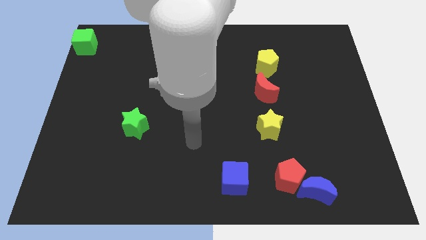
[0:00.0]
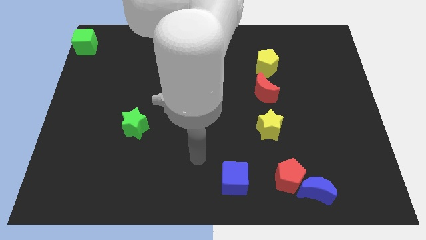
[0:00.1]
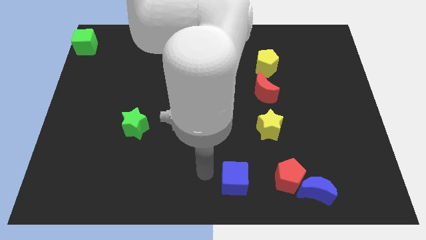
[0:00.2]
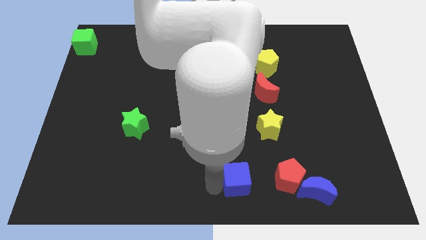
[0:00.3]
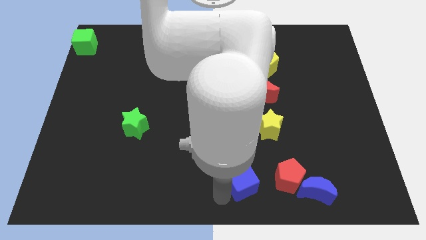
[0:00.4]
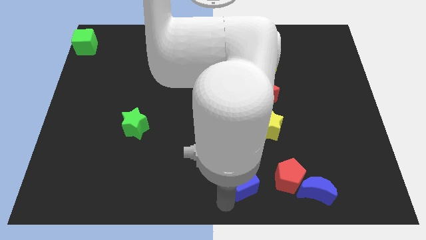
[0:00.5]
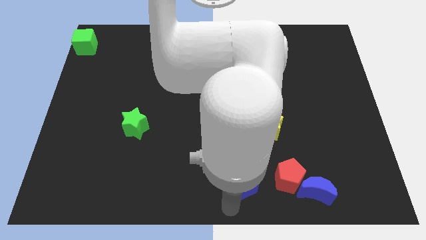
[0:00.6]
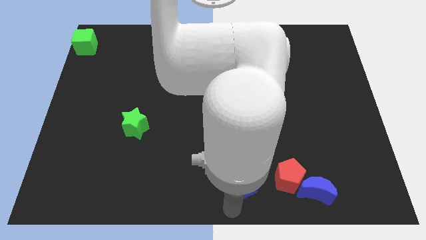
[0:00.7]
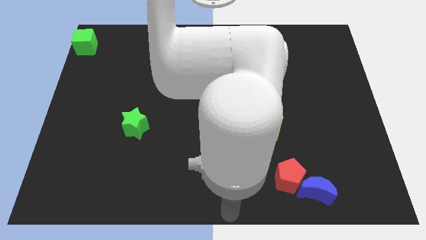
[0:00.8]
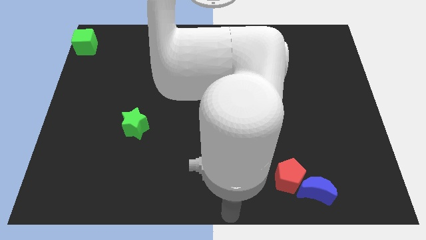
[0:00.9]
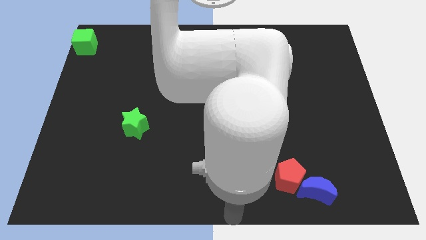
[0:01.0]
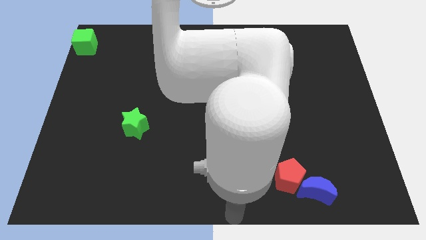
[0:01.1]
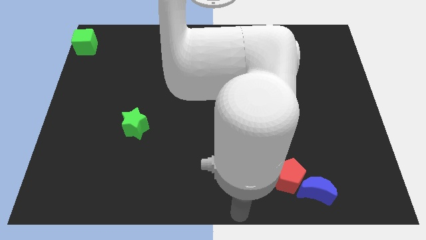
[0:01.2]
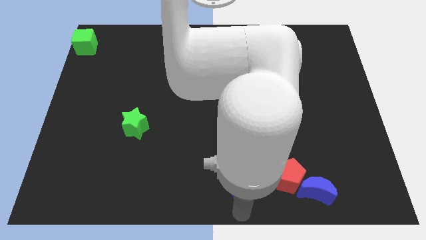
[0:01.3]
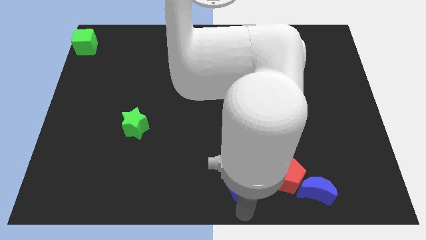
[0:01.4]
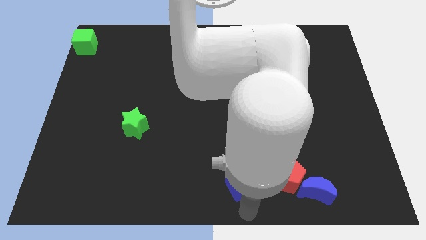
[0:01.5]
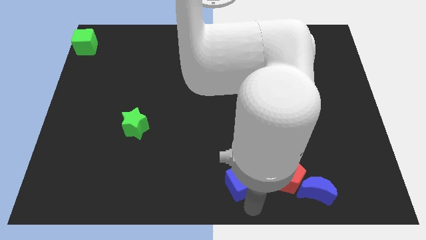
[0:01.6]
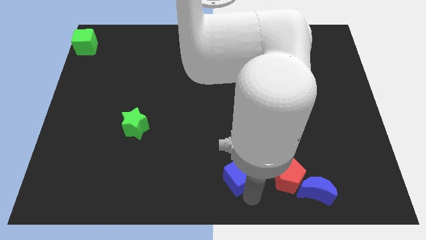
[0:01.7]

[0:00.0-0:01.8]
move your arm to the bottom of the blue block

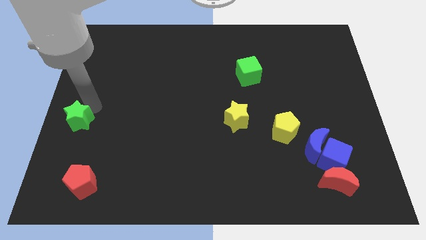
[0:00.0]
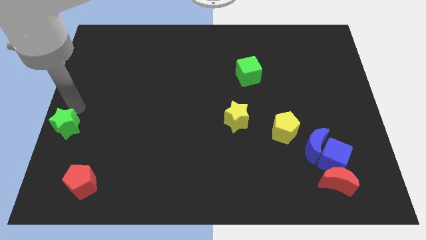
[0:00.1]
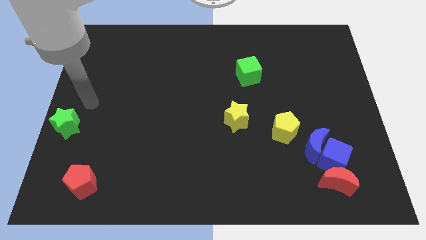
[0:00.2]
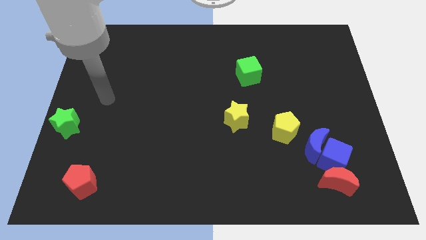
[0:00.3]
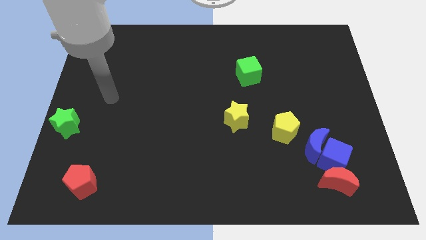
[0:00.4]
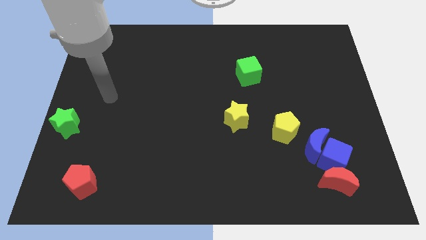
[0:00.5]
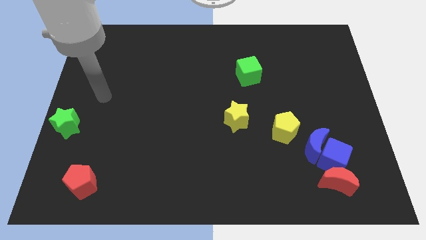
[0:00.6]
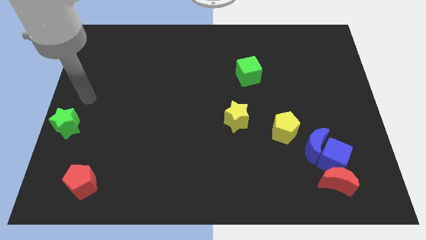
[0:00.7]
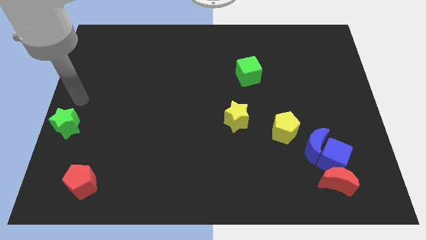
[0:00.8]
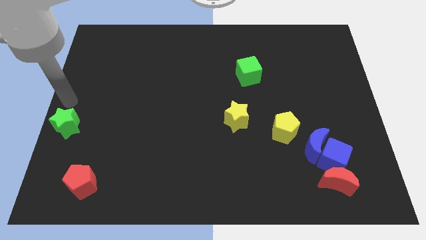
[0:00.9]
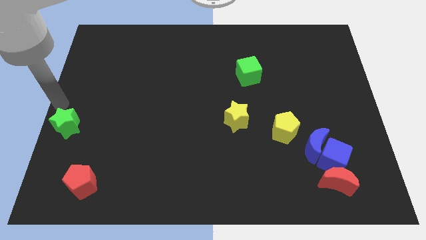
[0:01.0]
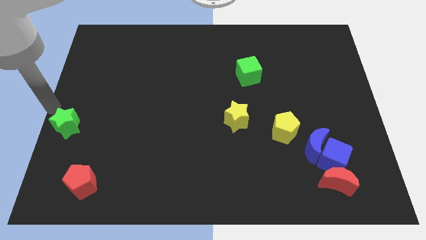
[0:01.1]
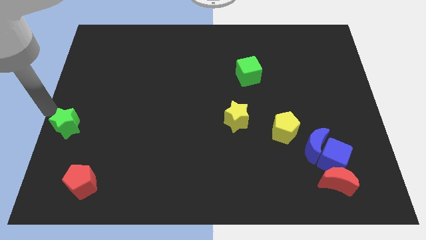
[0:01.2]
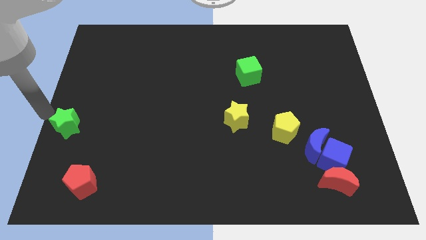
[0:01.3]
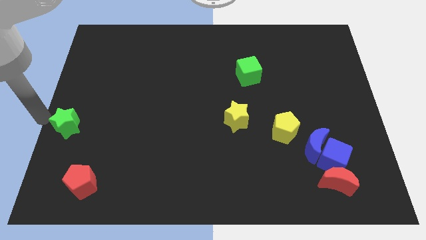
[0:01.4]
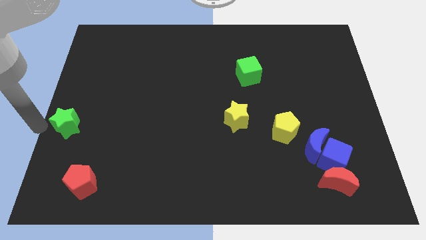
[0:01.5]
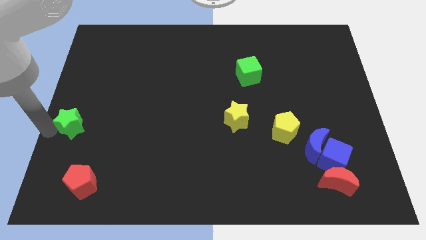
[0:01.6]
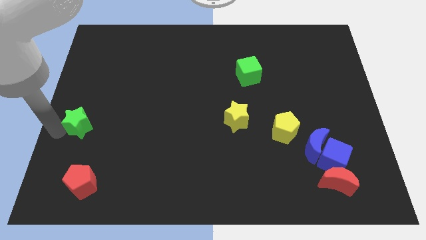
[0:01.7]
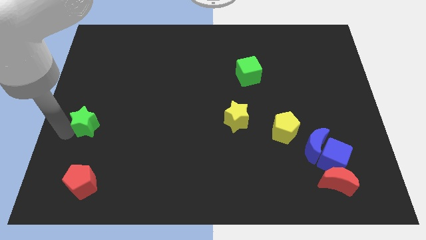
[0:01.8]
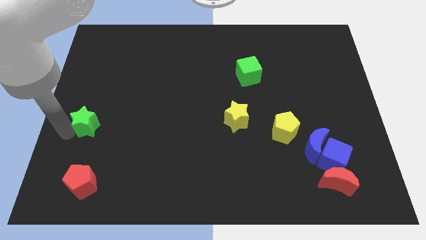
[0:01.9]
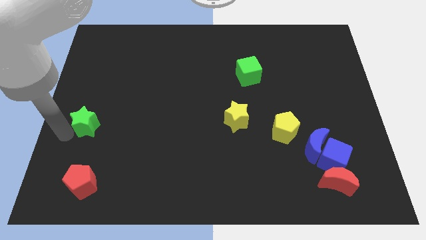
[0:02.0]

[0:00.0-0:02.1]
push the green star to the top side of the red pentagon

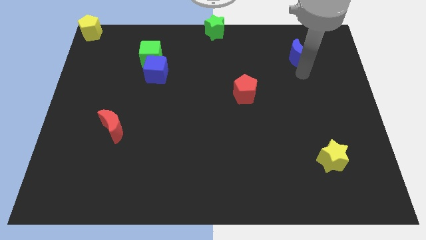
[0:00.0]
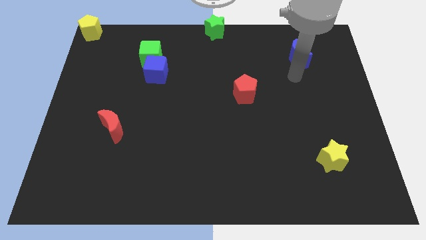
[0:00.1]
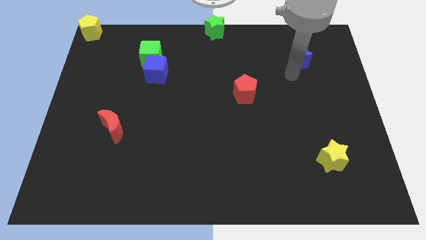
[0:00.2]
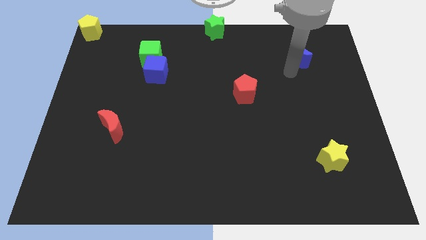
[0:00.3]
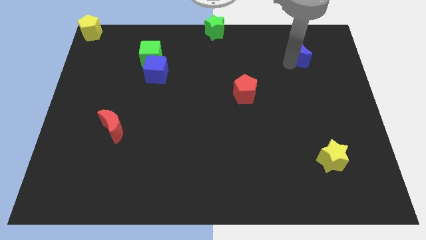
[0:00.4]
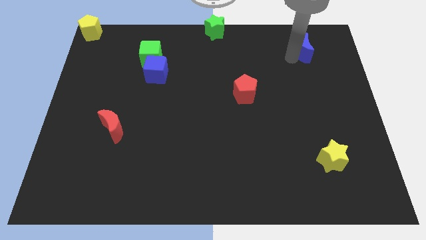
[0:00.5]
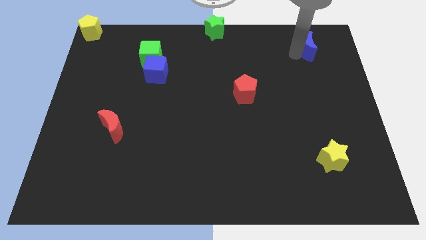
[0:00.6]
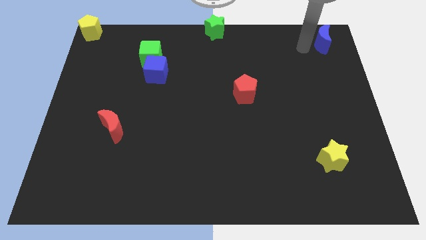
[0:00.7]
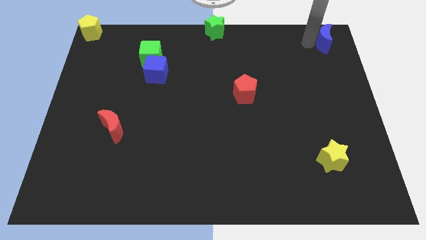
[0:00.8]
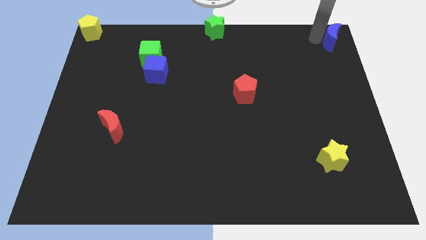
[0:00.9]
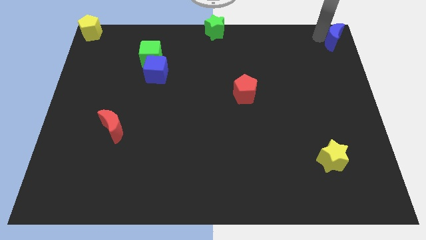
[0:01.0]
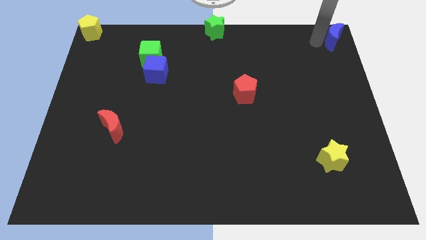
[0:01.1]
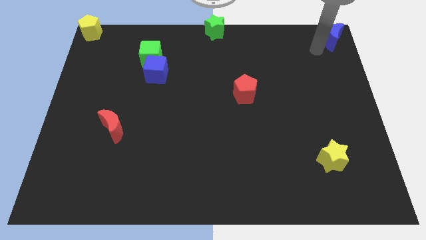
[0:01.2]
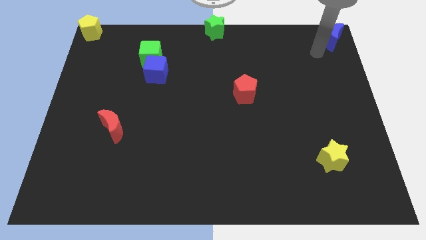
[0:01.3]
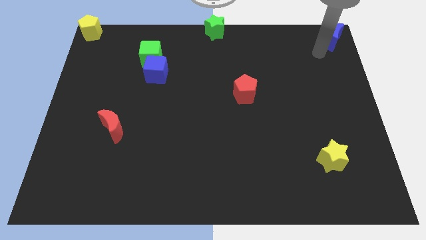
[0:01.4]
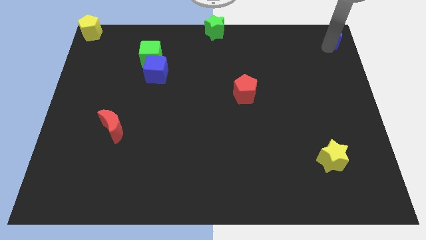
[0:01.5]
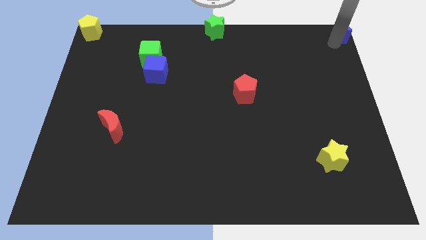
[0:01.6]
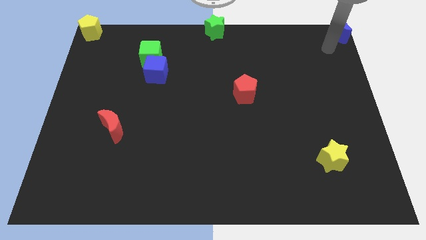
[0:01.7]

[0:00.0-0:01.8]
put the blue crescent to the top right corner

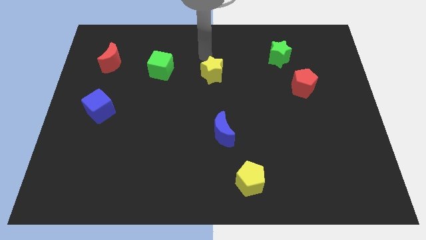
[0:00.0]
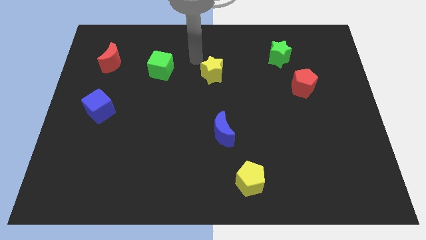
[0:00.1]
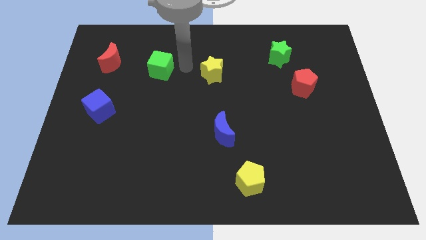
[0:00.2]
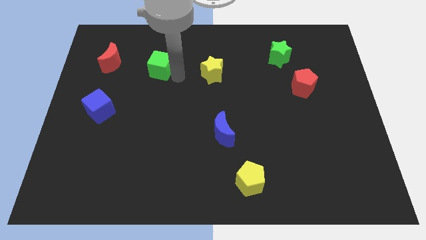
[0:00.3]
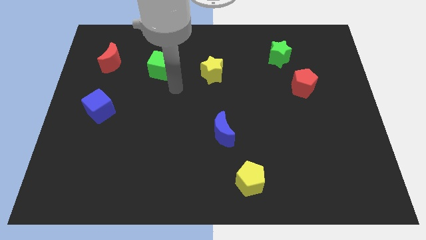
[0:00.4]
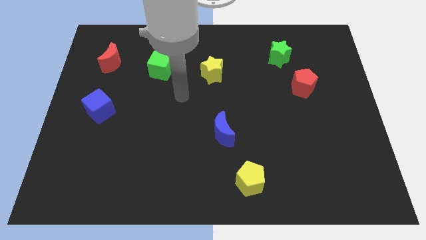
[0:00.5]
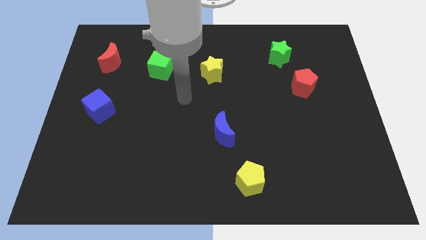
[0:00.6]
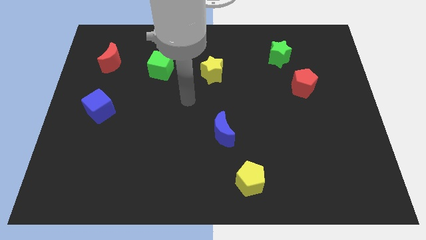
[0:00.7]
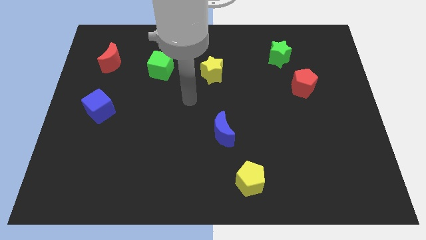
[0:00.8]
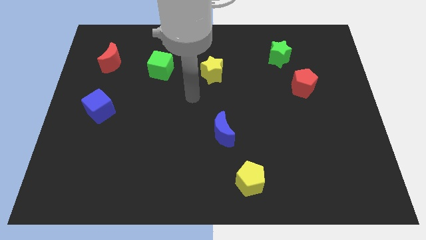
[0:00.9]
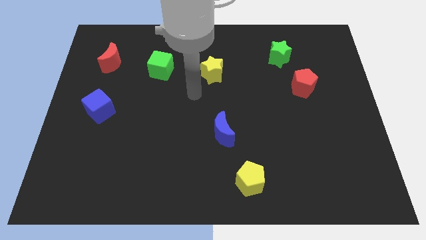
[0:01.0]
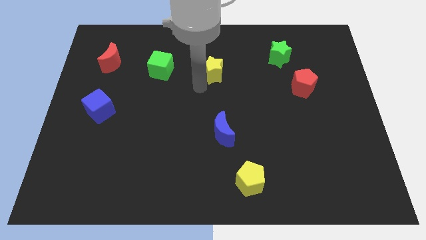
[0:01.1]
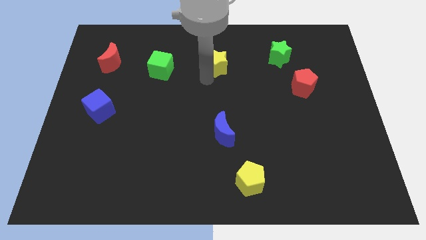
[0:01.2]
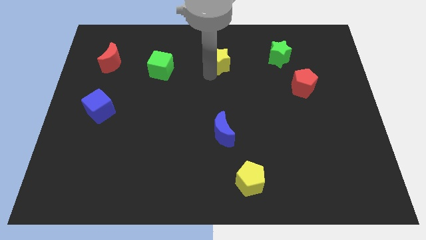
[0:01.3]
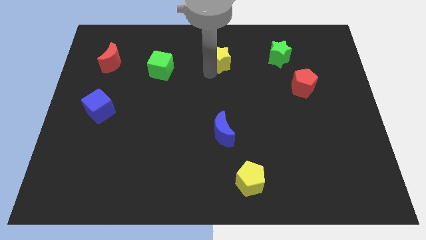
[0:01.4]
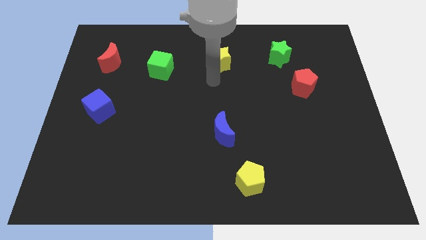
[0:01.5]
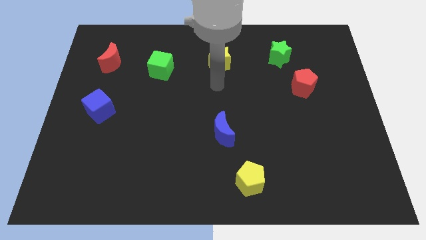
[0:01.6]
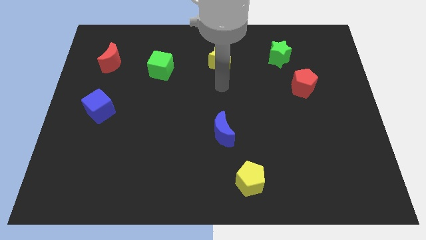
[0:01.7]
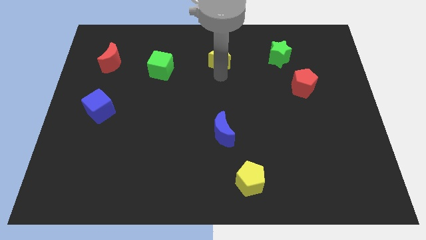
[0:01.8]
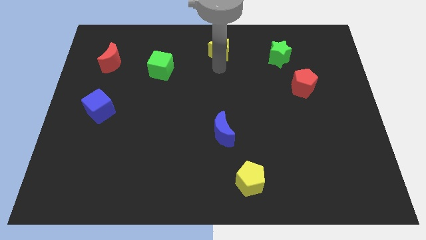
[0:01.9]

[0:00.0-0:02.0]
drag the yellow star horizontally to the left side of the green star

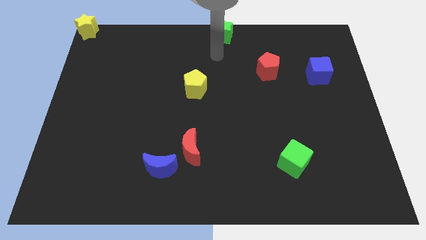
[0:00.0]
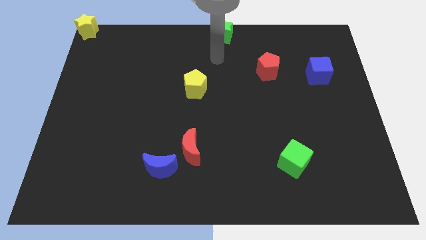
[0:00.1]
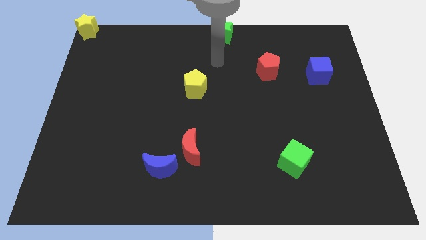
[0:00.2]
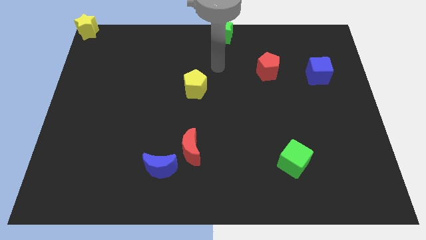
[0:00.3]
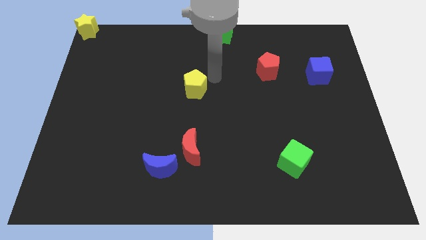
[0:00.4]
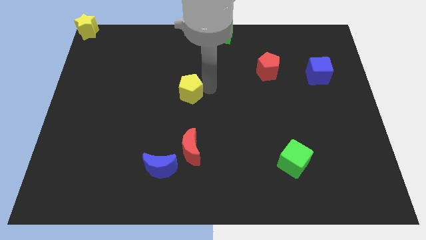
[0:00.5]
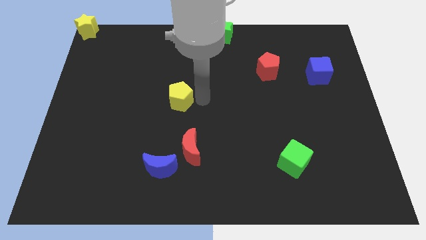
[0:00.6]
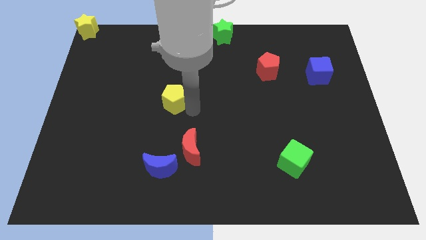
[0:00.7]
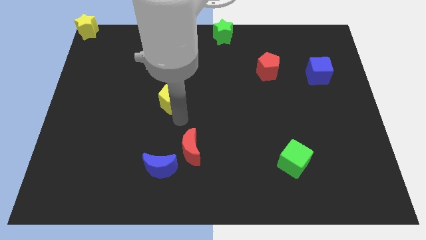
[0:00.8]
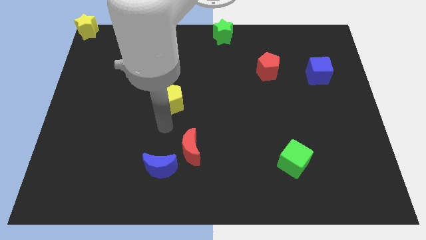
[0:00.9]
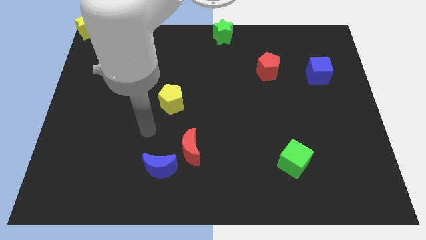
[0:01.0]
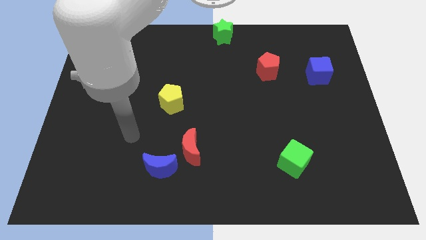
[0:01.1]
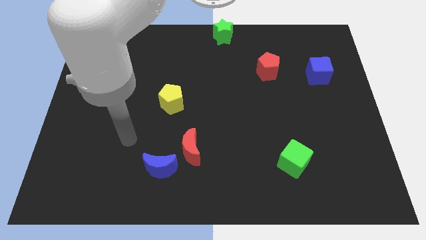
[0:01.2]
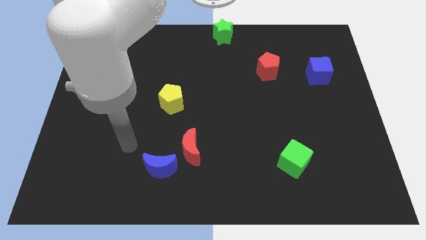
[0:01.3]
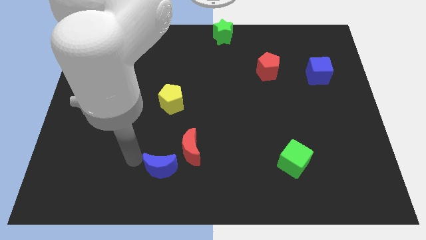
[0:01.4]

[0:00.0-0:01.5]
move yellow pentagon to the top of blue moon
